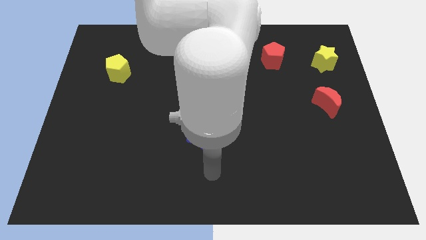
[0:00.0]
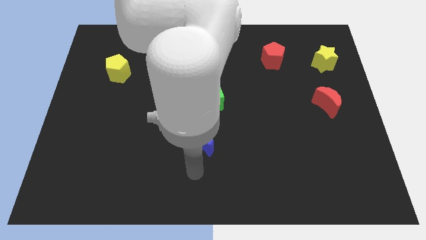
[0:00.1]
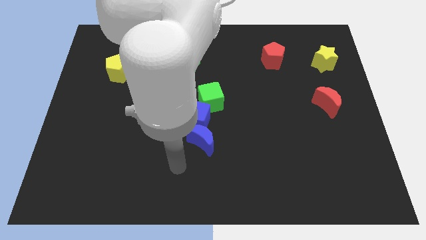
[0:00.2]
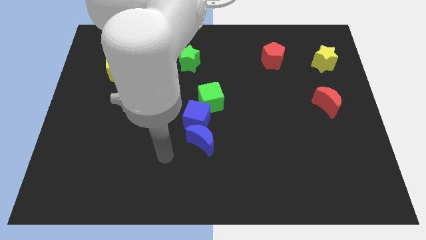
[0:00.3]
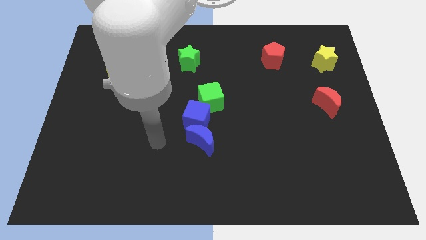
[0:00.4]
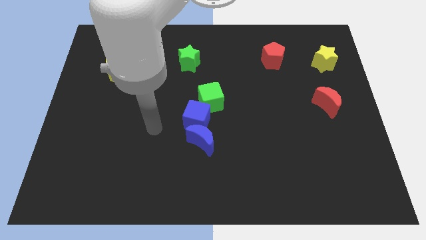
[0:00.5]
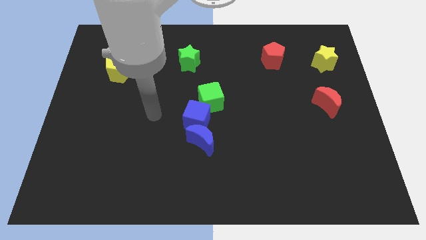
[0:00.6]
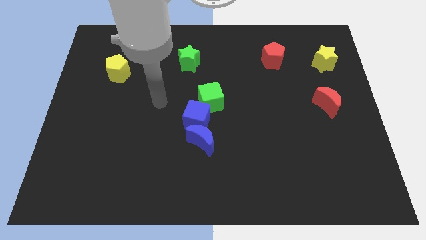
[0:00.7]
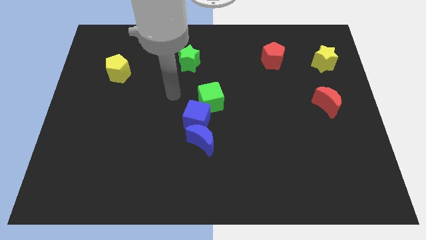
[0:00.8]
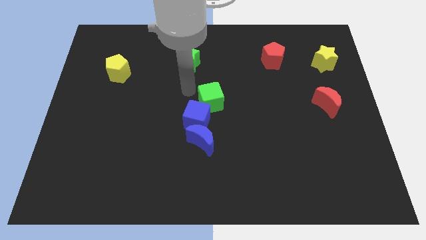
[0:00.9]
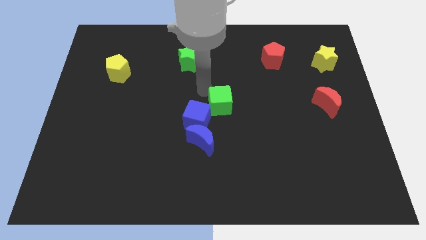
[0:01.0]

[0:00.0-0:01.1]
tap the green cube

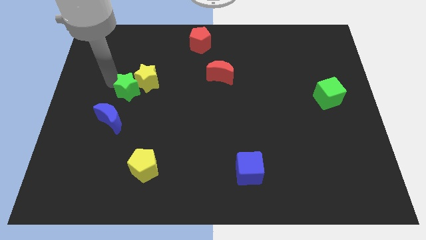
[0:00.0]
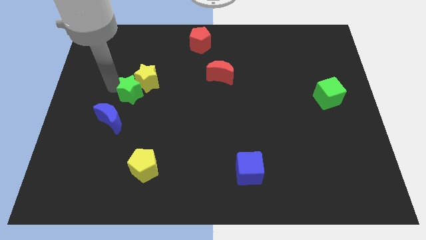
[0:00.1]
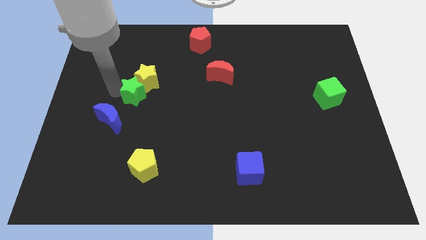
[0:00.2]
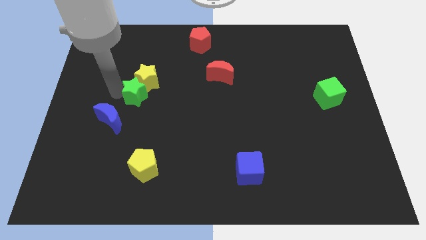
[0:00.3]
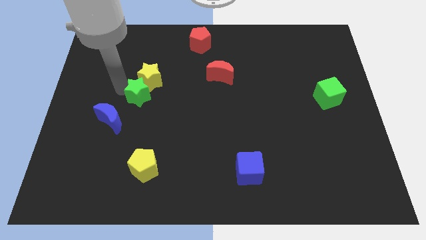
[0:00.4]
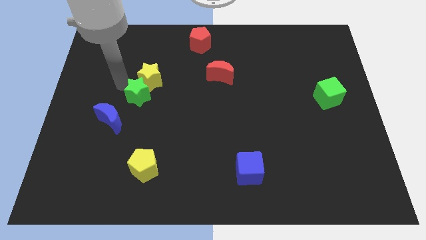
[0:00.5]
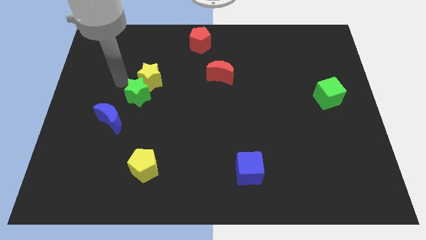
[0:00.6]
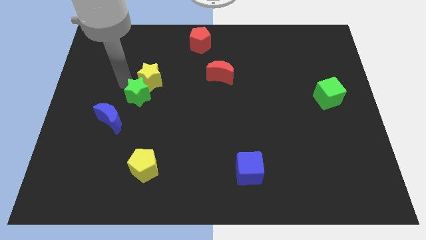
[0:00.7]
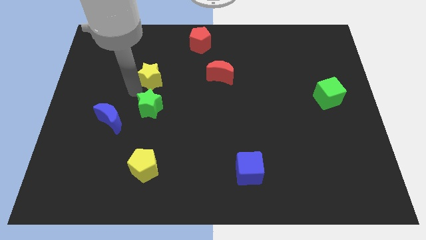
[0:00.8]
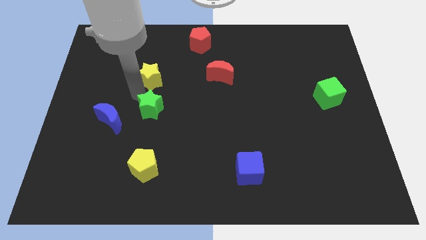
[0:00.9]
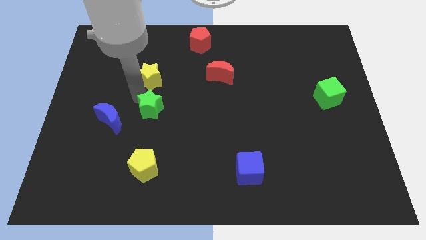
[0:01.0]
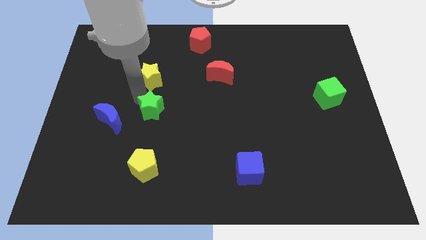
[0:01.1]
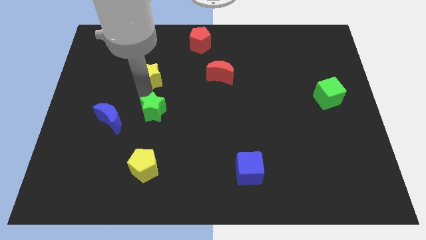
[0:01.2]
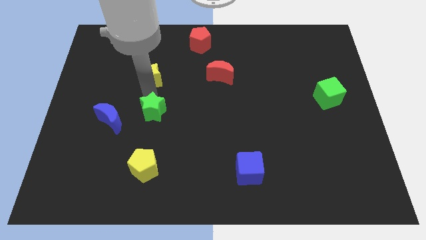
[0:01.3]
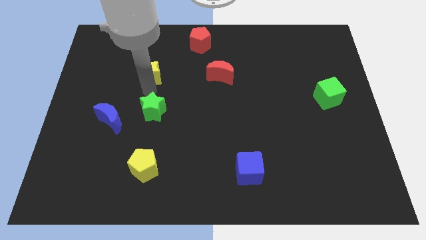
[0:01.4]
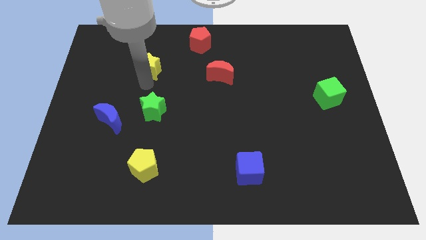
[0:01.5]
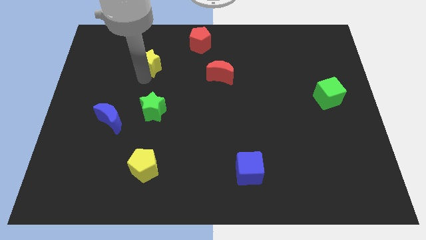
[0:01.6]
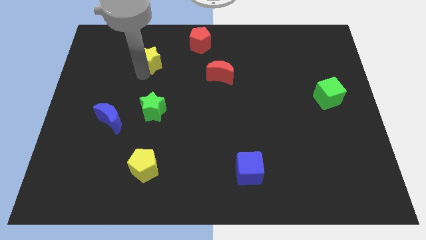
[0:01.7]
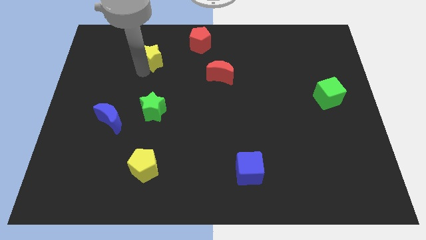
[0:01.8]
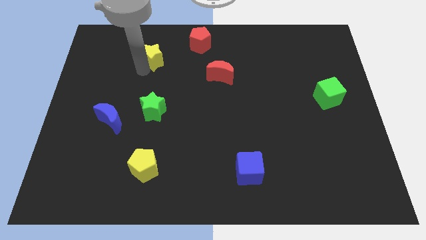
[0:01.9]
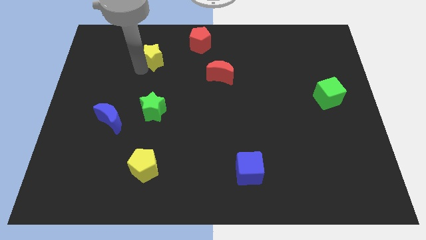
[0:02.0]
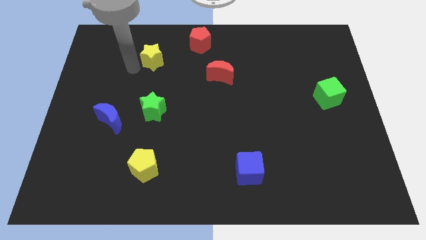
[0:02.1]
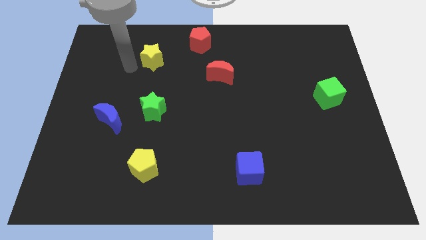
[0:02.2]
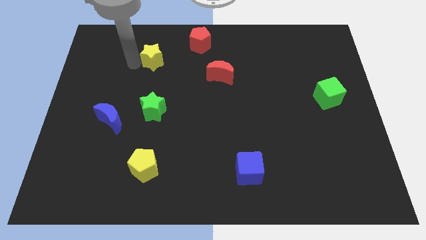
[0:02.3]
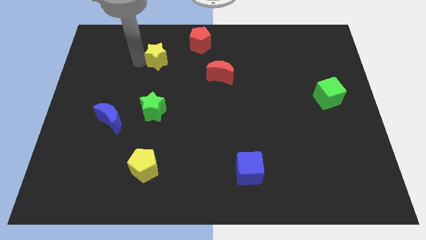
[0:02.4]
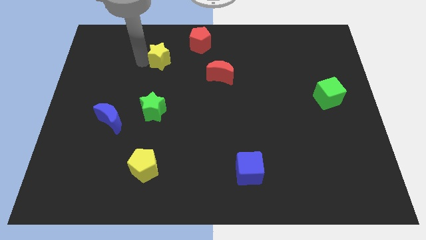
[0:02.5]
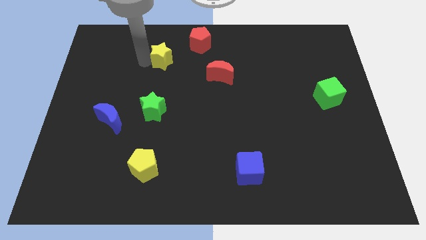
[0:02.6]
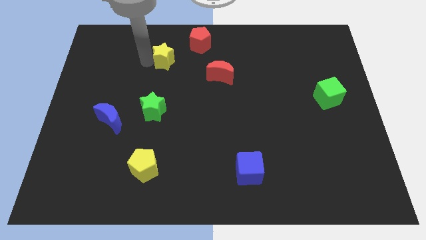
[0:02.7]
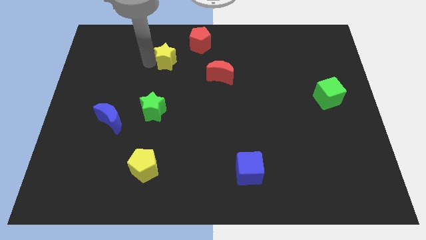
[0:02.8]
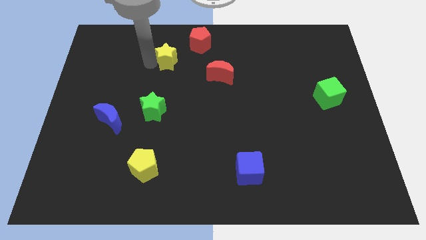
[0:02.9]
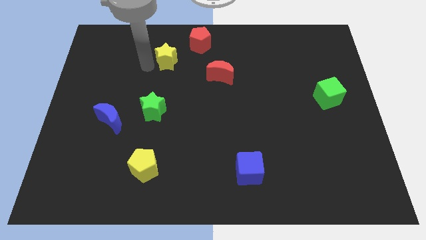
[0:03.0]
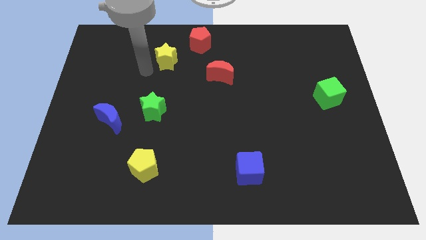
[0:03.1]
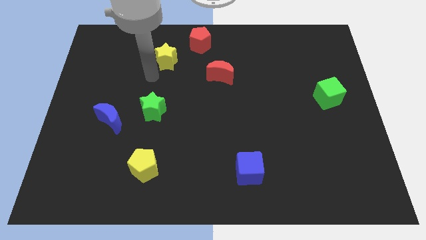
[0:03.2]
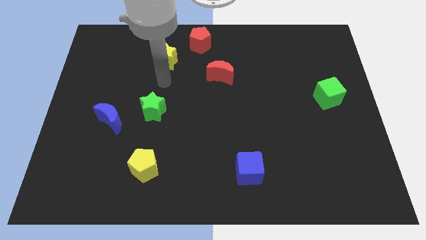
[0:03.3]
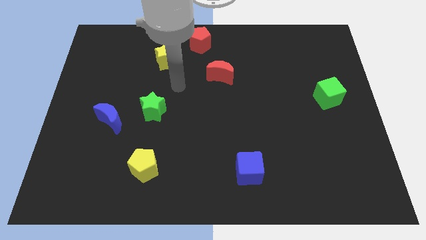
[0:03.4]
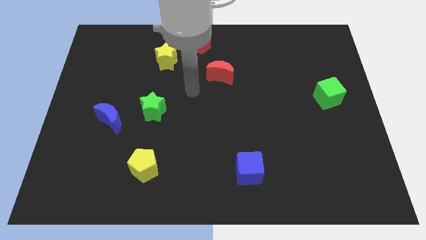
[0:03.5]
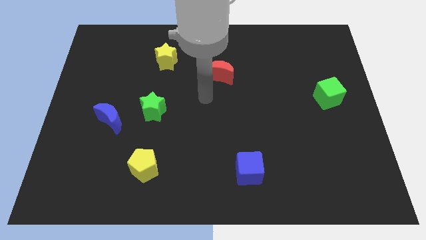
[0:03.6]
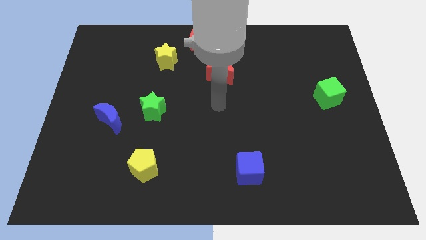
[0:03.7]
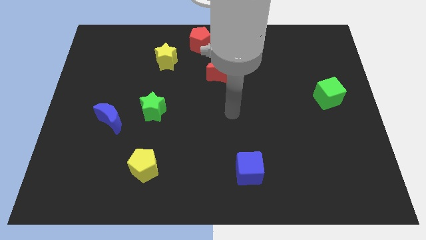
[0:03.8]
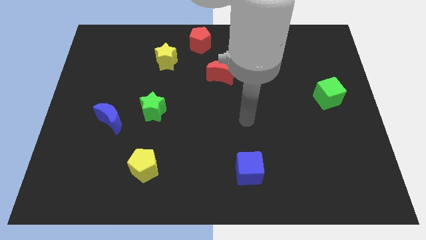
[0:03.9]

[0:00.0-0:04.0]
separate the yellow star from the green star

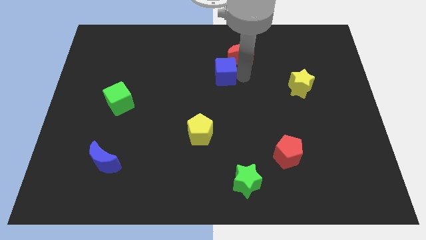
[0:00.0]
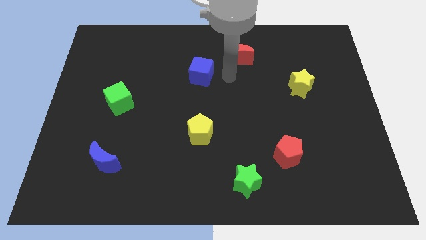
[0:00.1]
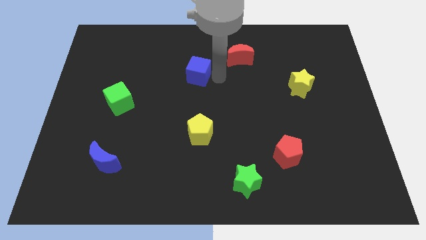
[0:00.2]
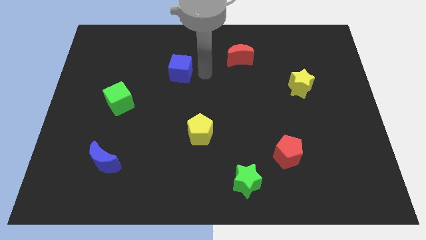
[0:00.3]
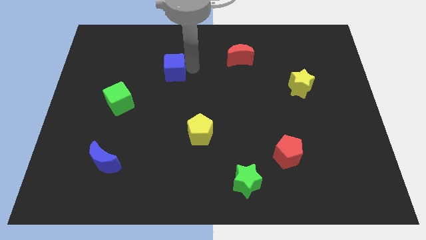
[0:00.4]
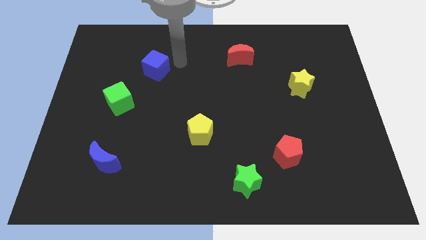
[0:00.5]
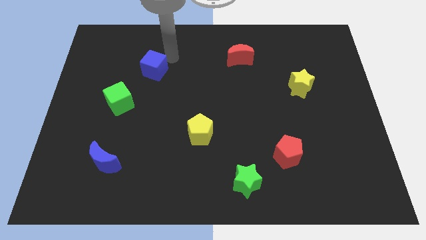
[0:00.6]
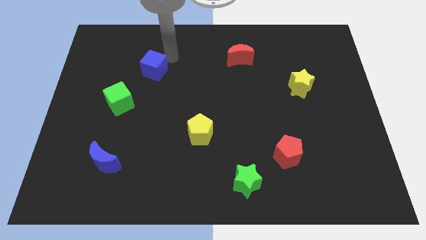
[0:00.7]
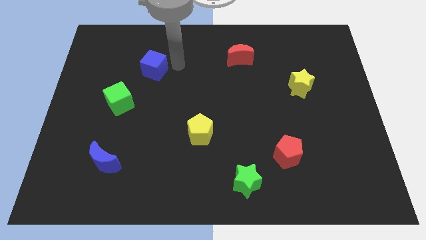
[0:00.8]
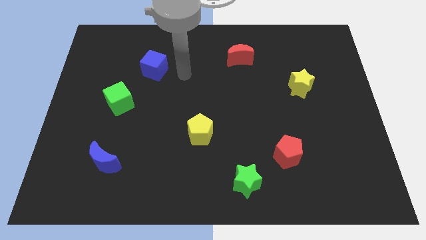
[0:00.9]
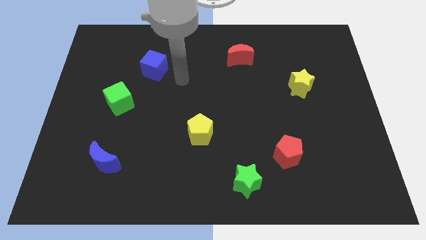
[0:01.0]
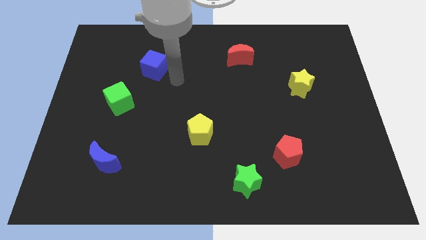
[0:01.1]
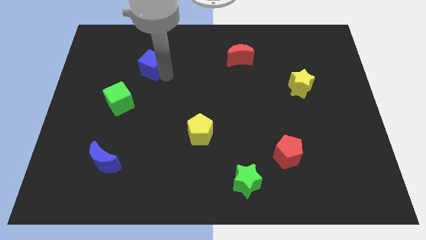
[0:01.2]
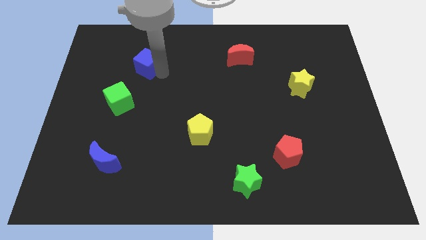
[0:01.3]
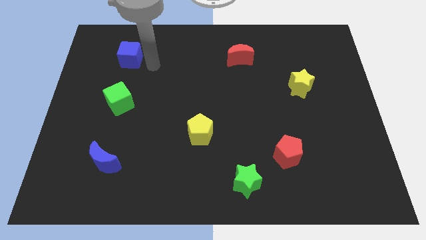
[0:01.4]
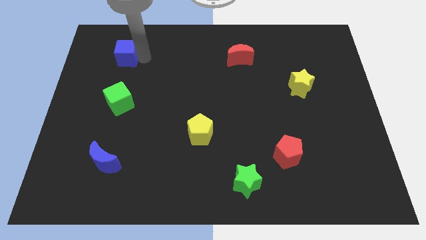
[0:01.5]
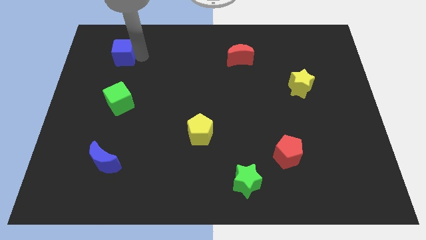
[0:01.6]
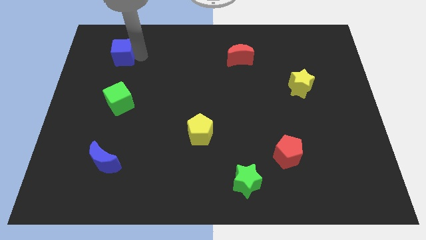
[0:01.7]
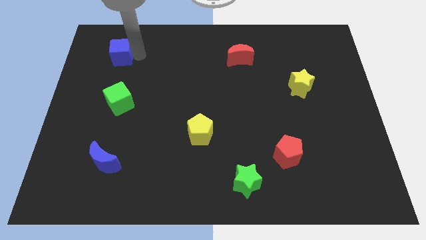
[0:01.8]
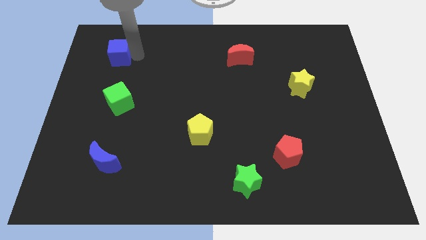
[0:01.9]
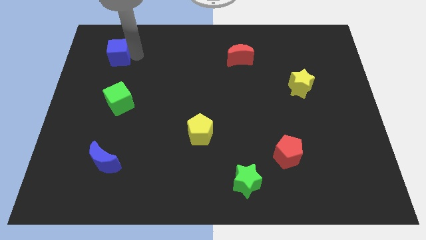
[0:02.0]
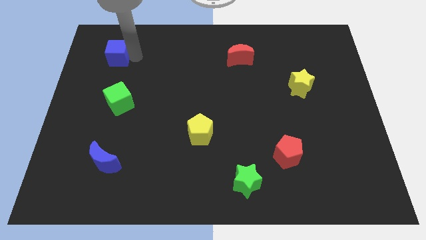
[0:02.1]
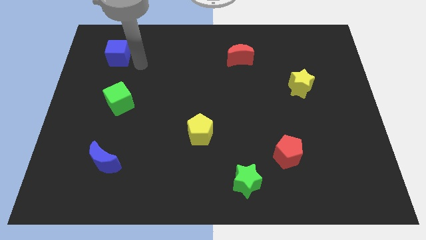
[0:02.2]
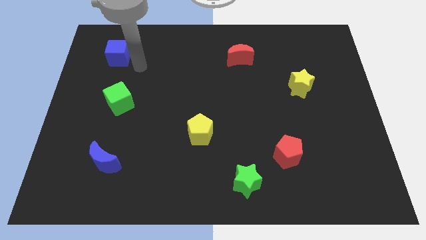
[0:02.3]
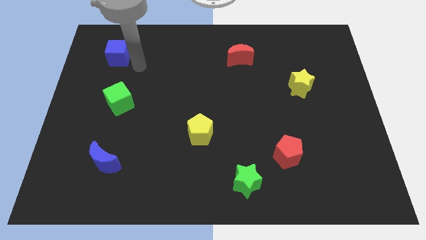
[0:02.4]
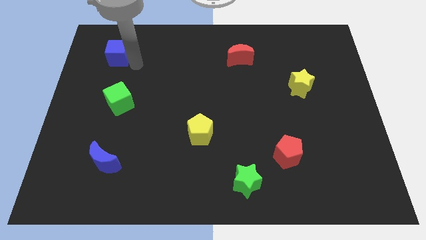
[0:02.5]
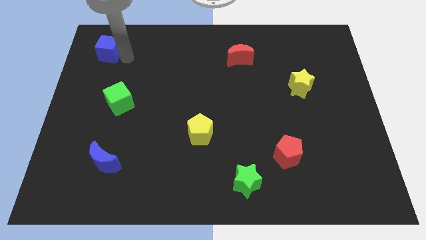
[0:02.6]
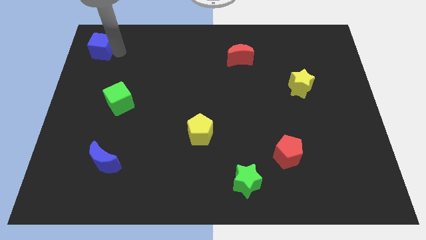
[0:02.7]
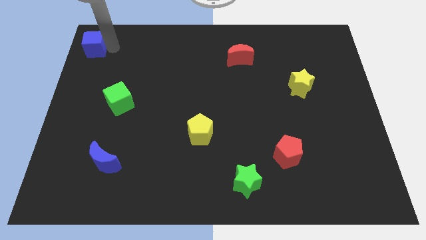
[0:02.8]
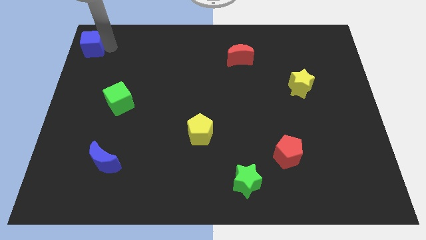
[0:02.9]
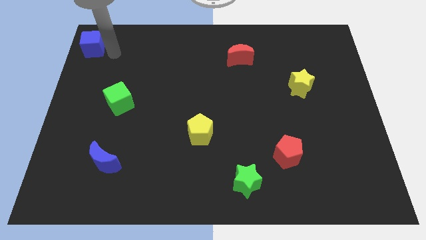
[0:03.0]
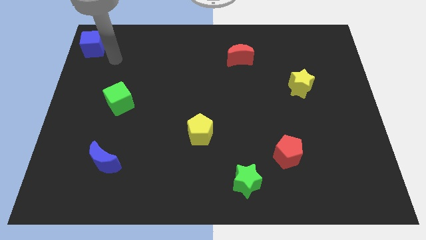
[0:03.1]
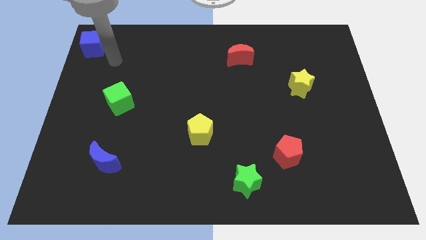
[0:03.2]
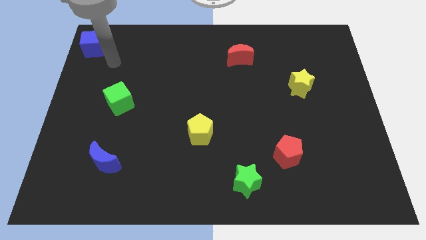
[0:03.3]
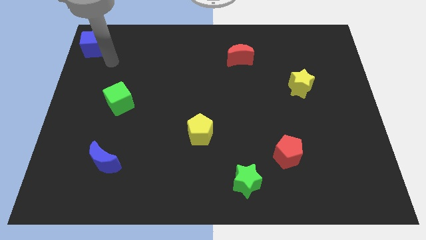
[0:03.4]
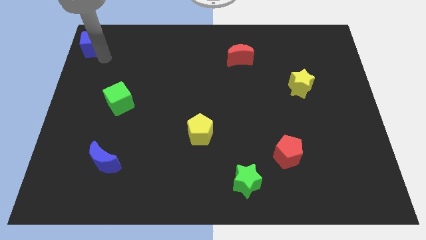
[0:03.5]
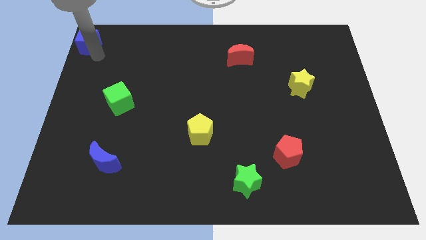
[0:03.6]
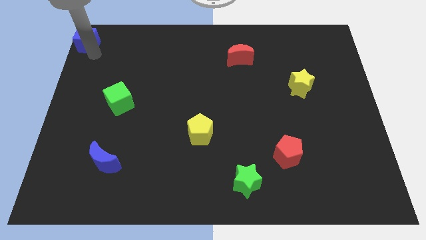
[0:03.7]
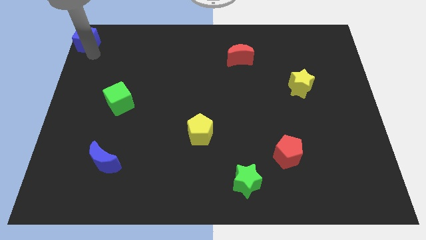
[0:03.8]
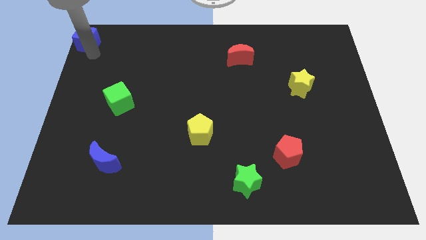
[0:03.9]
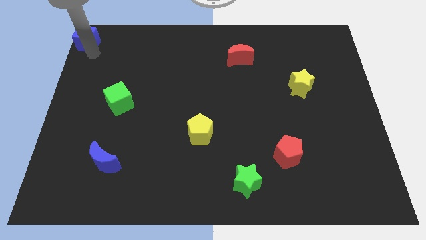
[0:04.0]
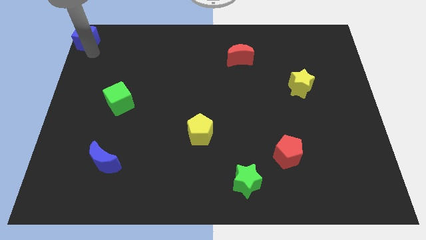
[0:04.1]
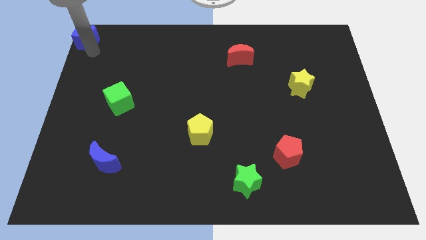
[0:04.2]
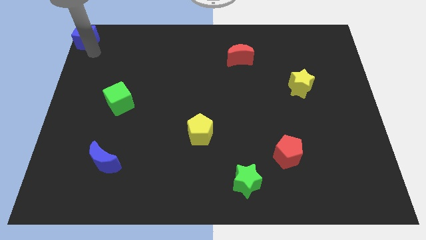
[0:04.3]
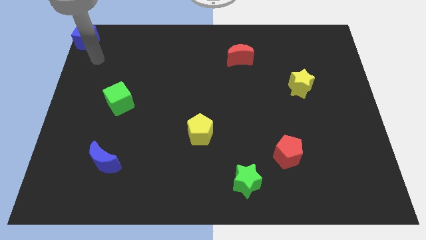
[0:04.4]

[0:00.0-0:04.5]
move the blue cube to the top left corner of the board
